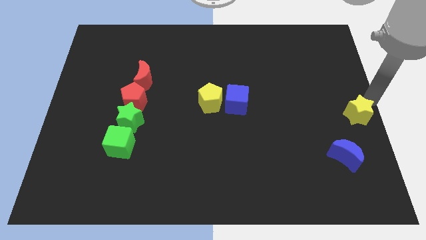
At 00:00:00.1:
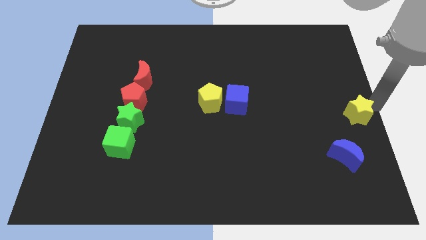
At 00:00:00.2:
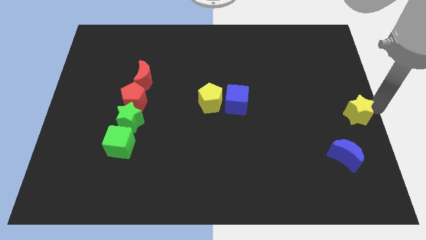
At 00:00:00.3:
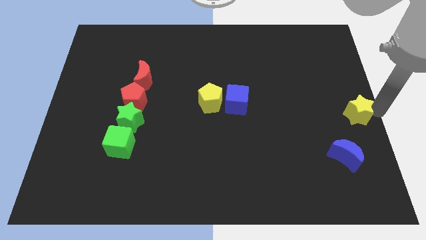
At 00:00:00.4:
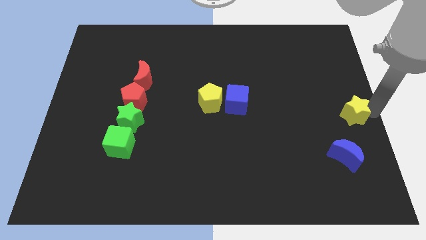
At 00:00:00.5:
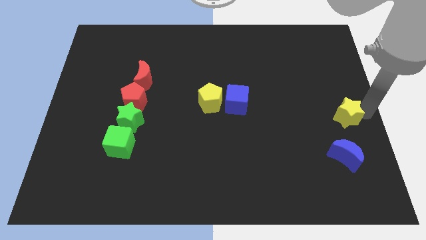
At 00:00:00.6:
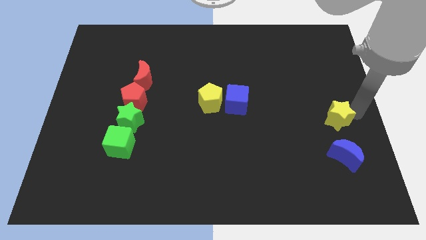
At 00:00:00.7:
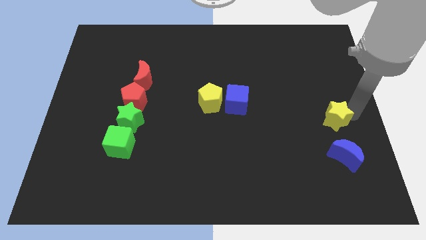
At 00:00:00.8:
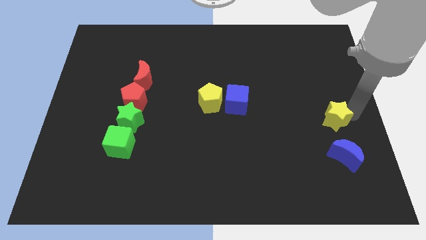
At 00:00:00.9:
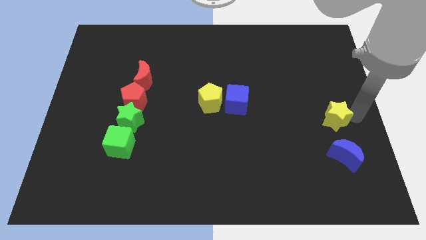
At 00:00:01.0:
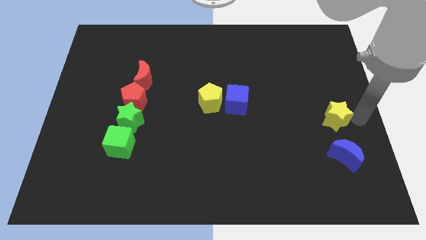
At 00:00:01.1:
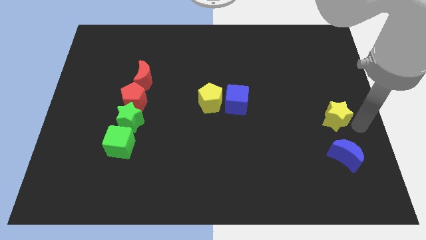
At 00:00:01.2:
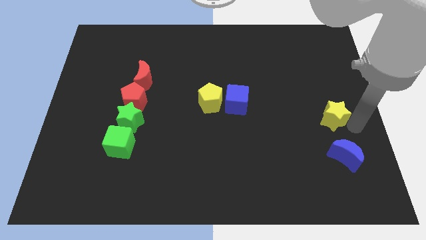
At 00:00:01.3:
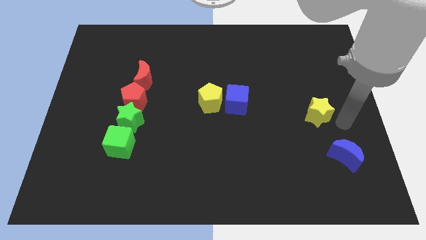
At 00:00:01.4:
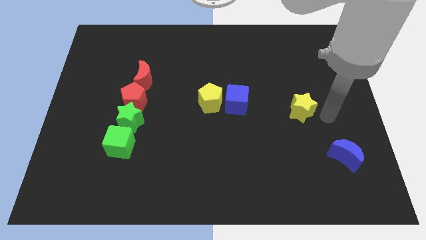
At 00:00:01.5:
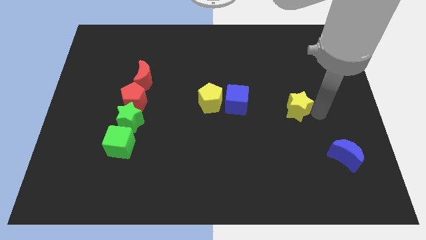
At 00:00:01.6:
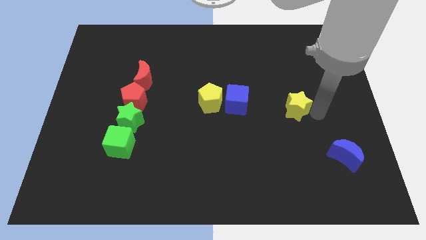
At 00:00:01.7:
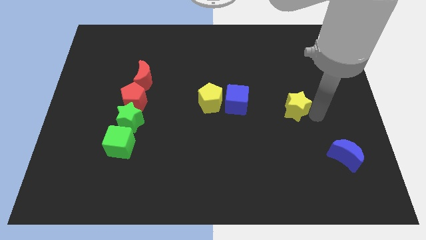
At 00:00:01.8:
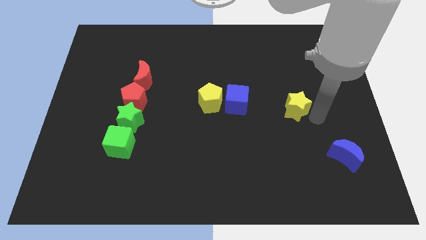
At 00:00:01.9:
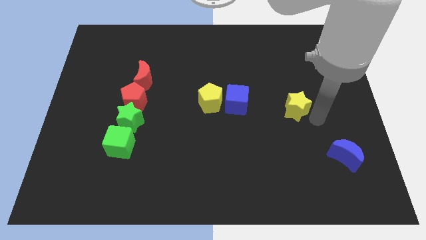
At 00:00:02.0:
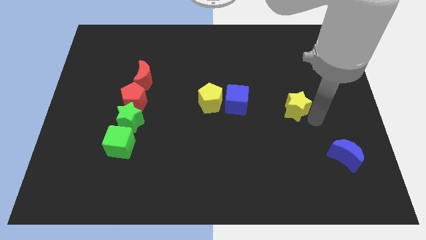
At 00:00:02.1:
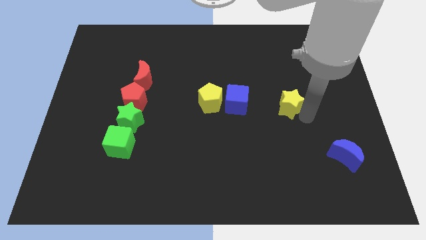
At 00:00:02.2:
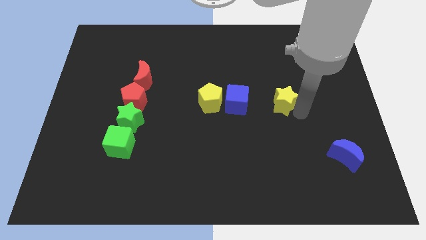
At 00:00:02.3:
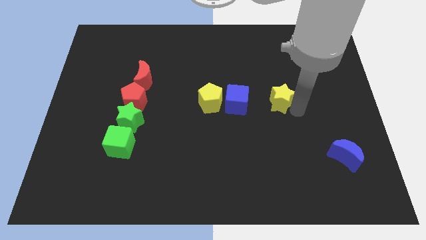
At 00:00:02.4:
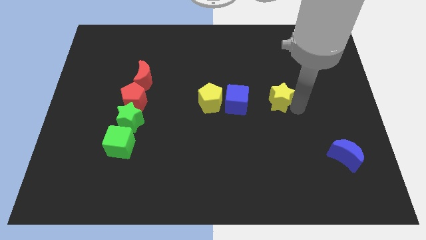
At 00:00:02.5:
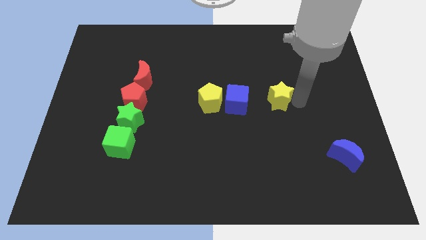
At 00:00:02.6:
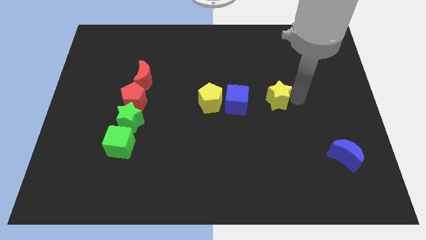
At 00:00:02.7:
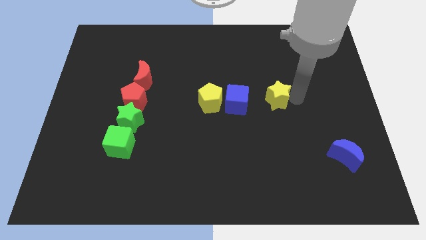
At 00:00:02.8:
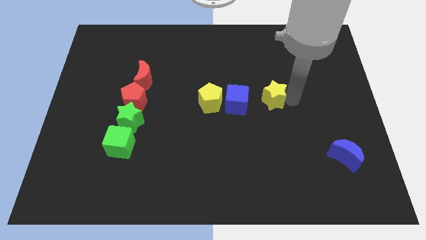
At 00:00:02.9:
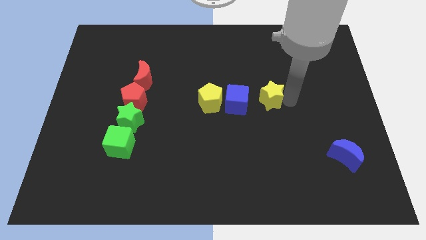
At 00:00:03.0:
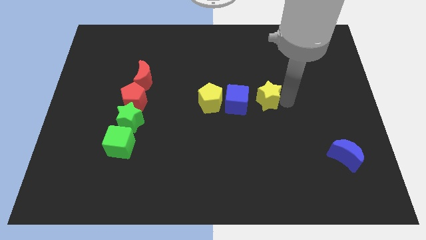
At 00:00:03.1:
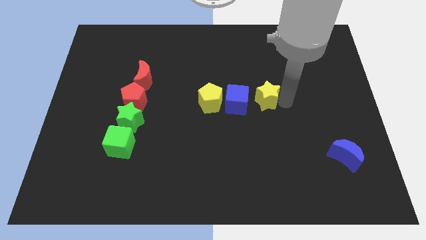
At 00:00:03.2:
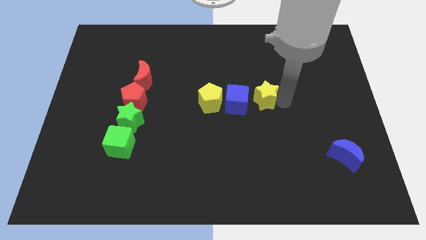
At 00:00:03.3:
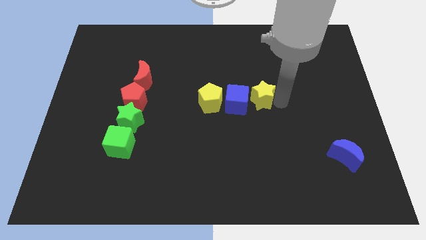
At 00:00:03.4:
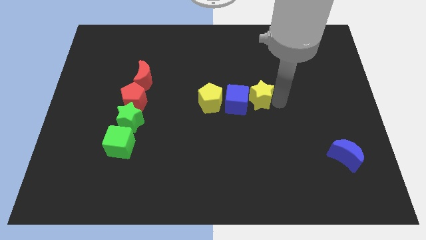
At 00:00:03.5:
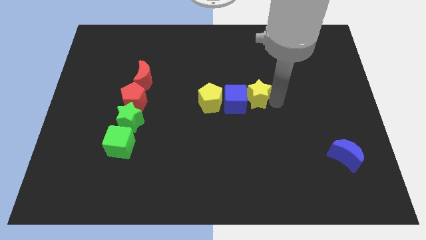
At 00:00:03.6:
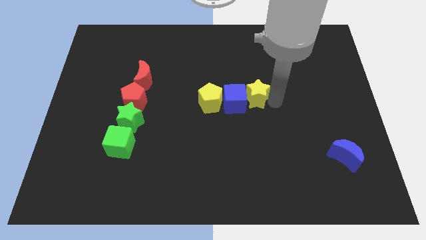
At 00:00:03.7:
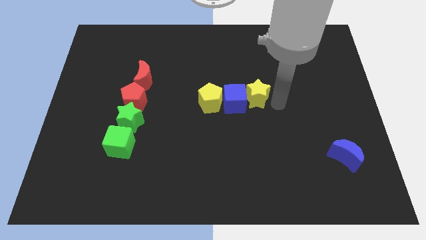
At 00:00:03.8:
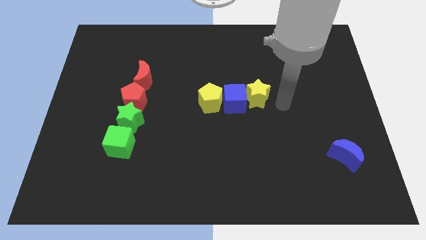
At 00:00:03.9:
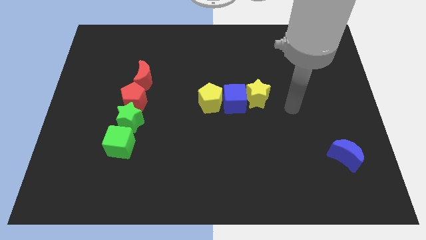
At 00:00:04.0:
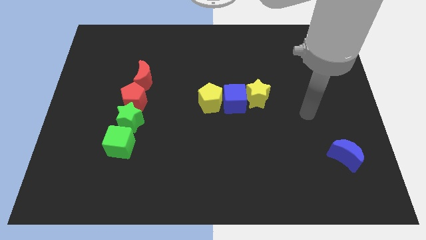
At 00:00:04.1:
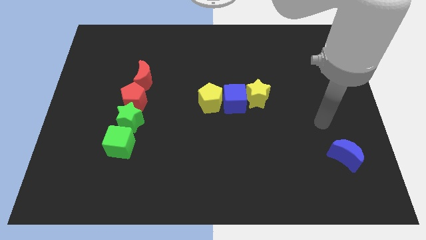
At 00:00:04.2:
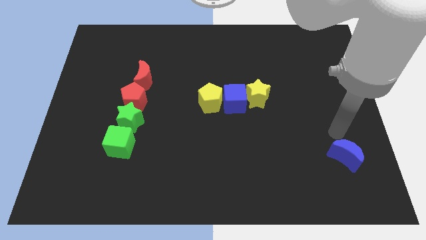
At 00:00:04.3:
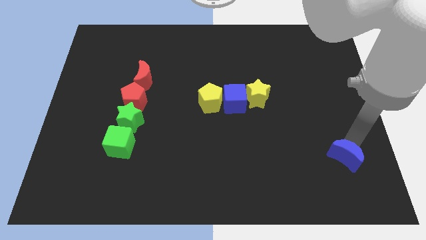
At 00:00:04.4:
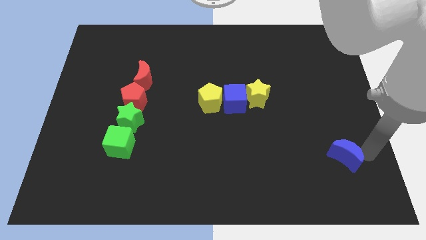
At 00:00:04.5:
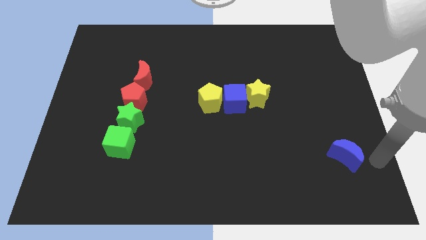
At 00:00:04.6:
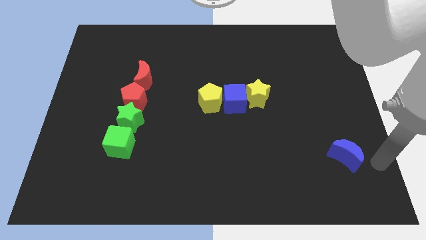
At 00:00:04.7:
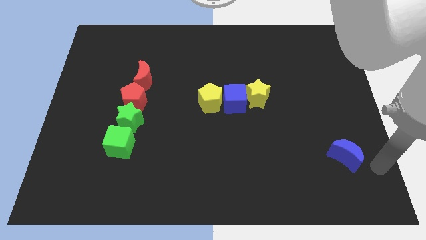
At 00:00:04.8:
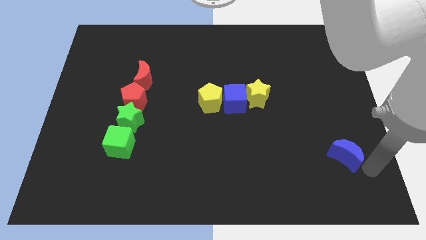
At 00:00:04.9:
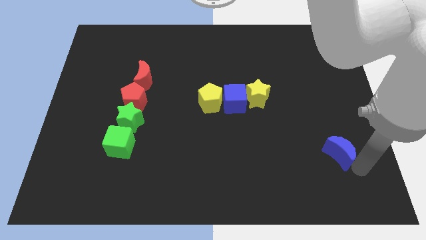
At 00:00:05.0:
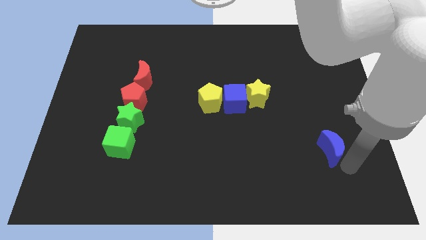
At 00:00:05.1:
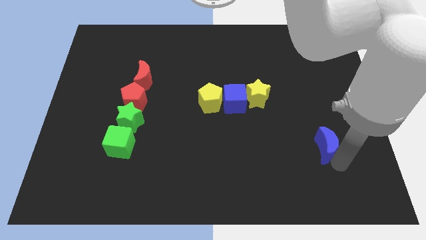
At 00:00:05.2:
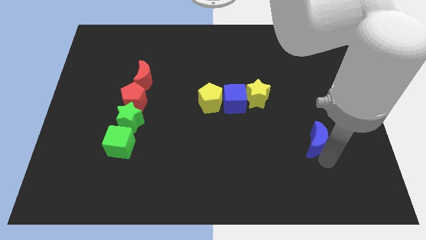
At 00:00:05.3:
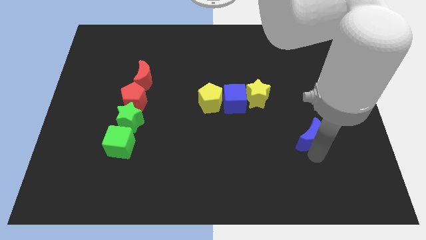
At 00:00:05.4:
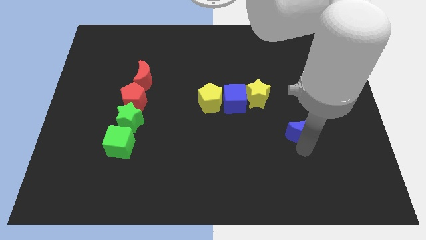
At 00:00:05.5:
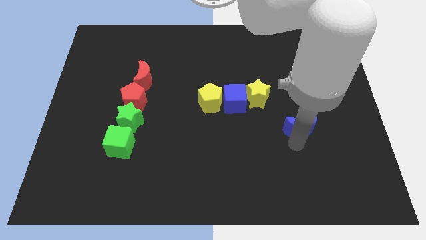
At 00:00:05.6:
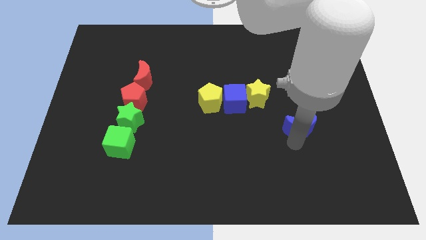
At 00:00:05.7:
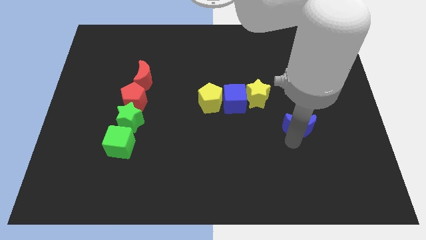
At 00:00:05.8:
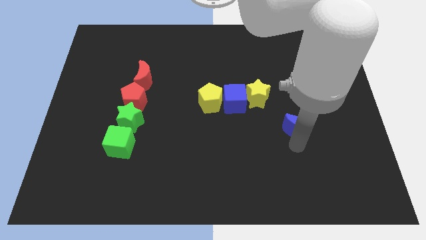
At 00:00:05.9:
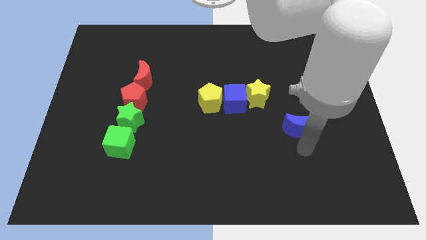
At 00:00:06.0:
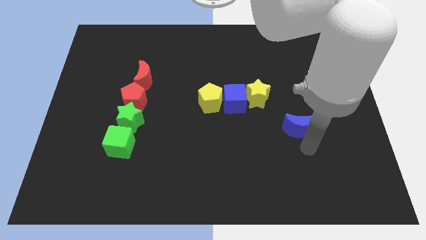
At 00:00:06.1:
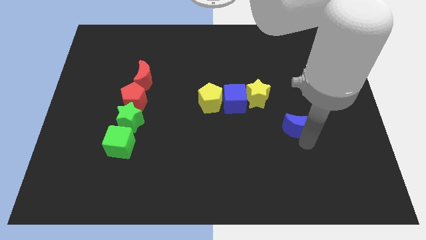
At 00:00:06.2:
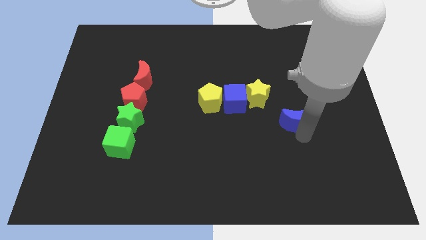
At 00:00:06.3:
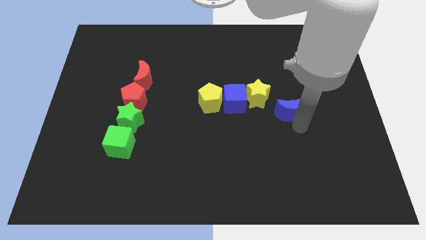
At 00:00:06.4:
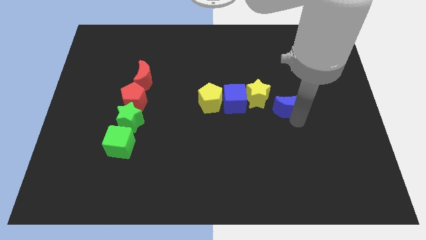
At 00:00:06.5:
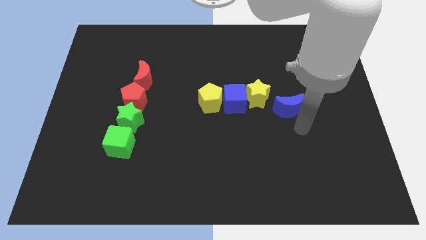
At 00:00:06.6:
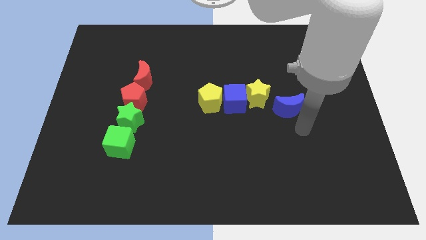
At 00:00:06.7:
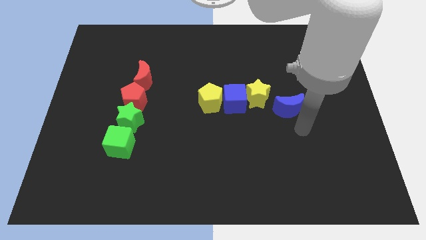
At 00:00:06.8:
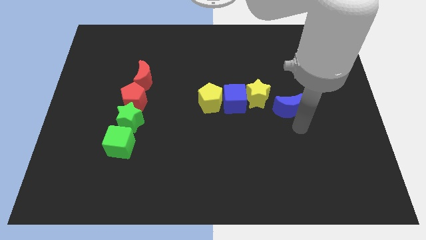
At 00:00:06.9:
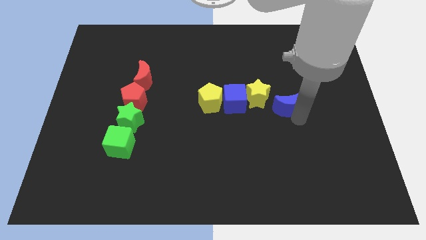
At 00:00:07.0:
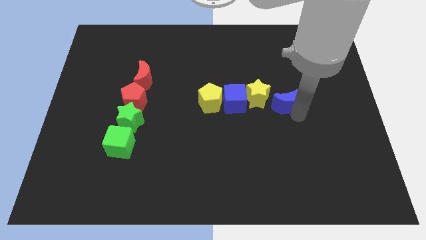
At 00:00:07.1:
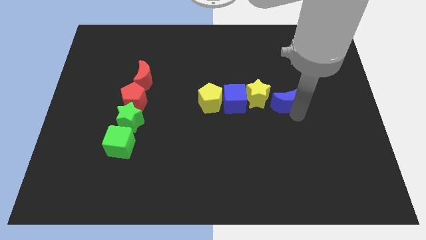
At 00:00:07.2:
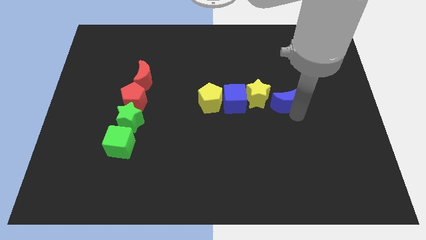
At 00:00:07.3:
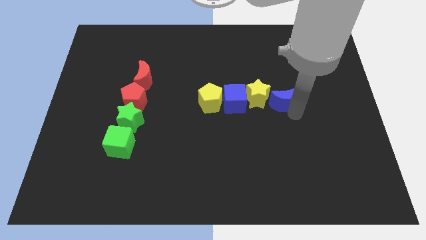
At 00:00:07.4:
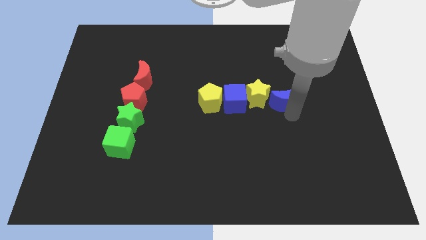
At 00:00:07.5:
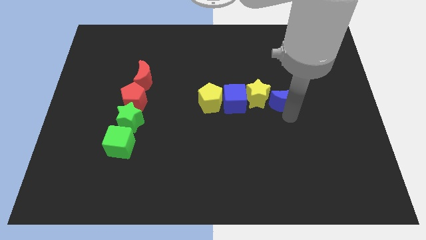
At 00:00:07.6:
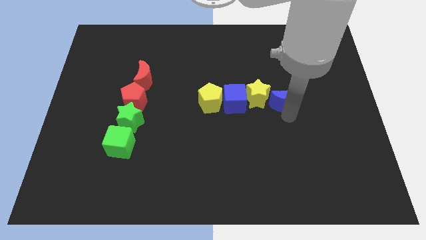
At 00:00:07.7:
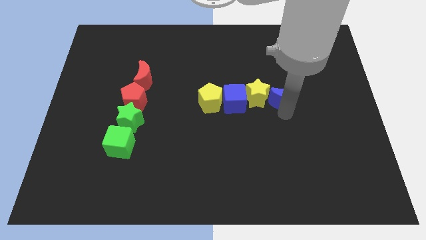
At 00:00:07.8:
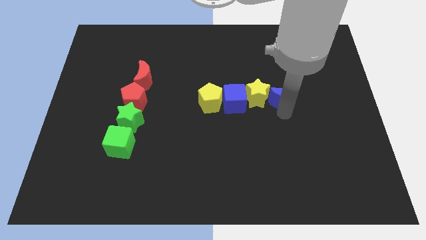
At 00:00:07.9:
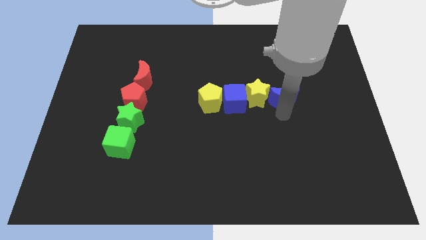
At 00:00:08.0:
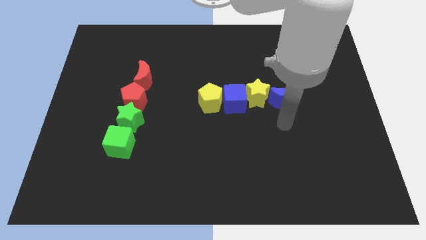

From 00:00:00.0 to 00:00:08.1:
make a horizontal line with the yellow star blue crescent to the right of the blue cube

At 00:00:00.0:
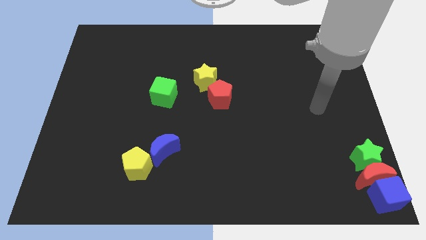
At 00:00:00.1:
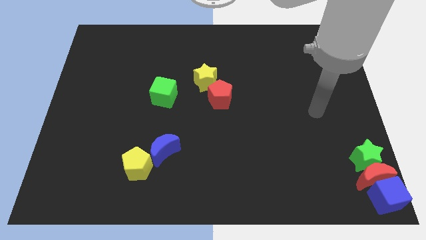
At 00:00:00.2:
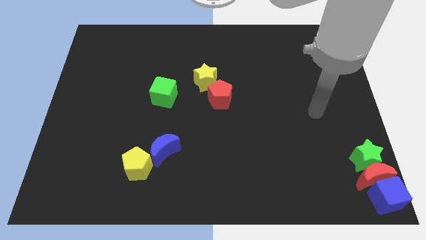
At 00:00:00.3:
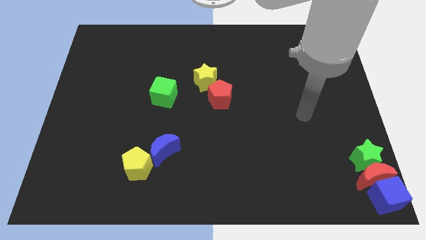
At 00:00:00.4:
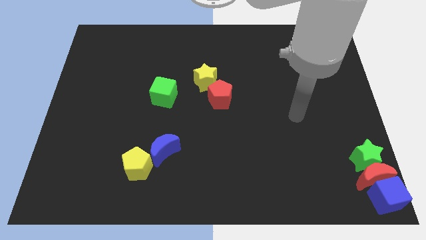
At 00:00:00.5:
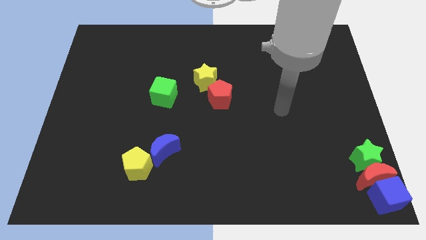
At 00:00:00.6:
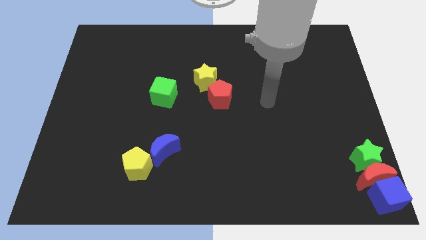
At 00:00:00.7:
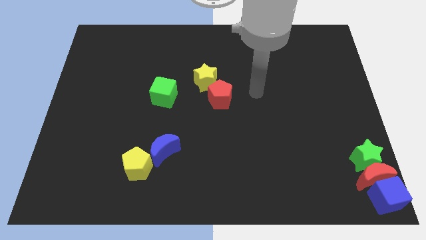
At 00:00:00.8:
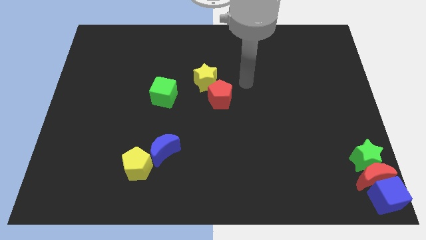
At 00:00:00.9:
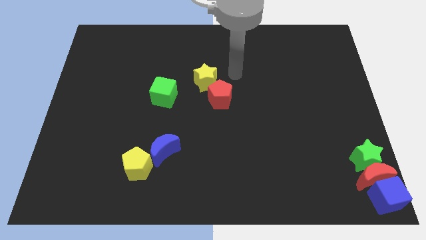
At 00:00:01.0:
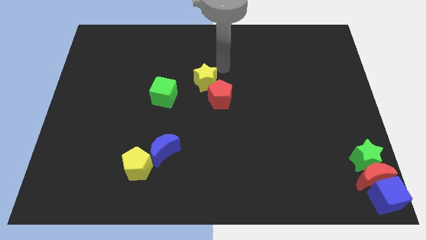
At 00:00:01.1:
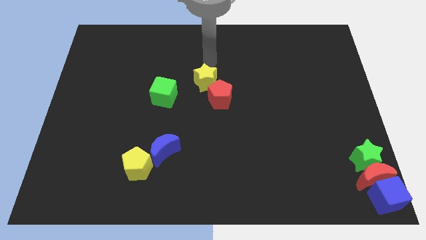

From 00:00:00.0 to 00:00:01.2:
place your arm to the top of the yellow star
